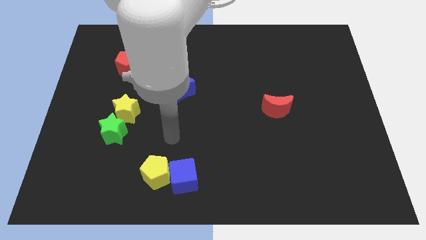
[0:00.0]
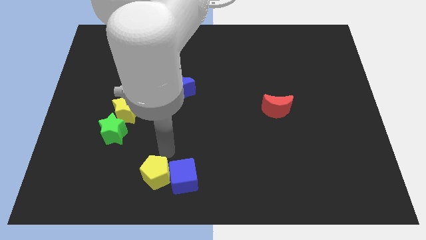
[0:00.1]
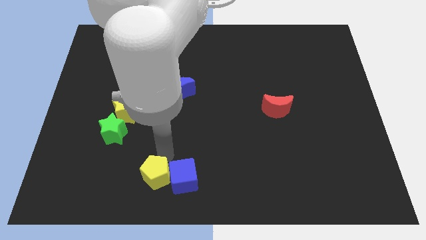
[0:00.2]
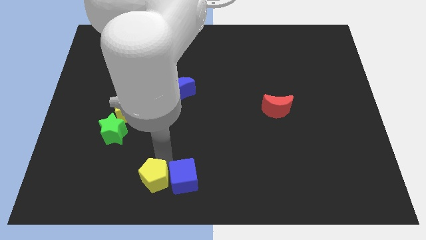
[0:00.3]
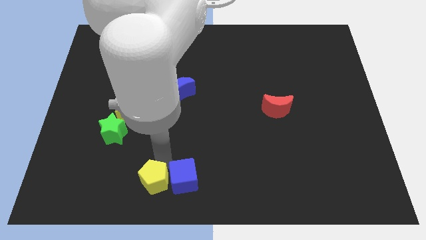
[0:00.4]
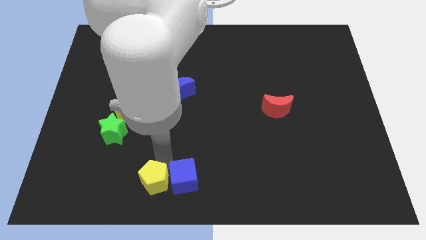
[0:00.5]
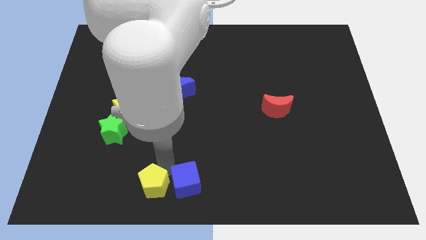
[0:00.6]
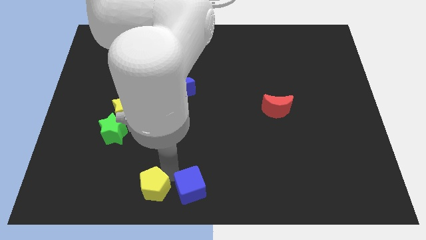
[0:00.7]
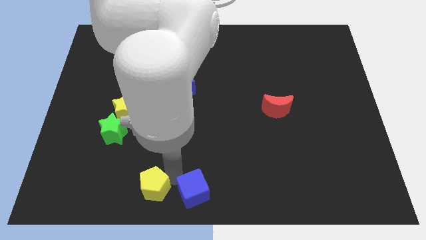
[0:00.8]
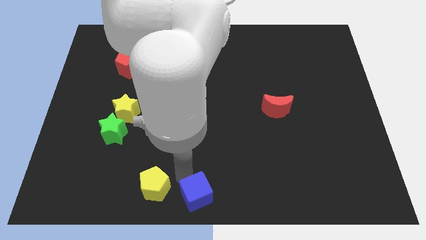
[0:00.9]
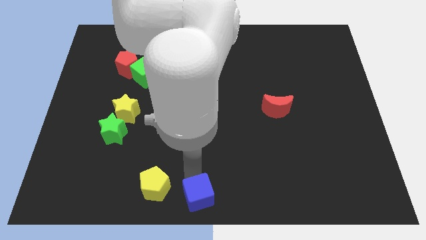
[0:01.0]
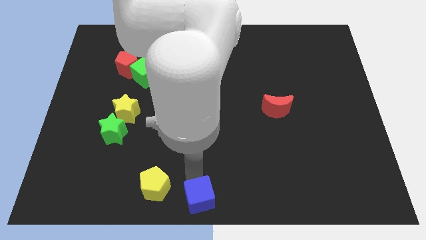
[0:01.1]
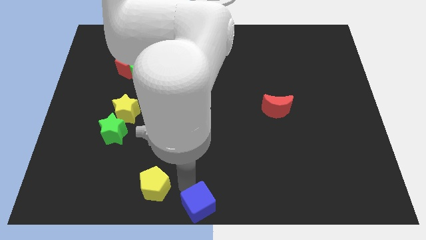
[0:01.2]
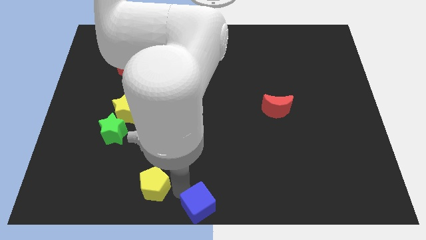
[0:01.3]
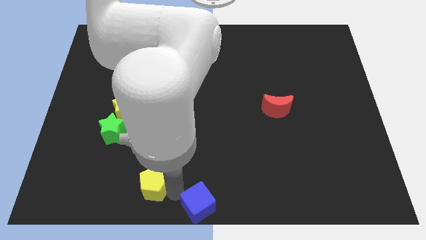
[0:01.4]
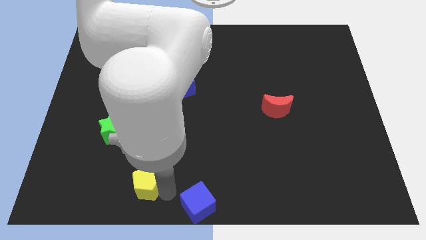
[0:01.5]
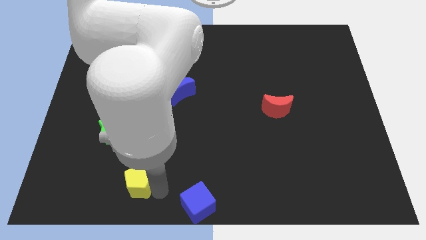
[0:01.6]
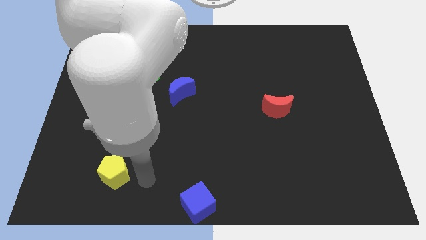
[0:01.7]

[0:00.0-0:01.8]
separate the yellow pentagon and blue cube

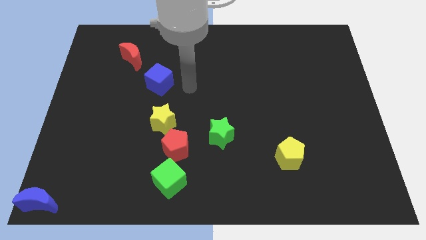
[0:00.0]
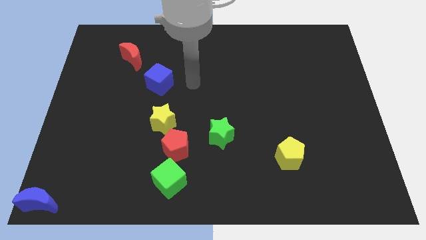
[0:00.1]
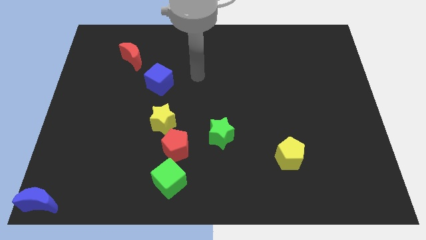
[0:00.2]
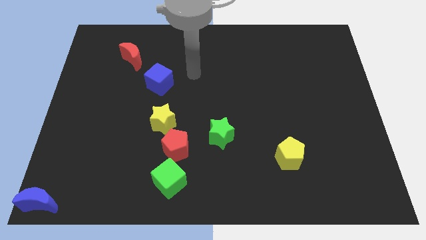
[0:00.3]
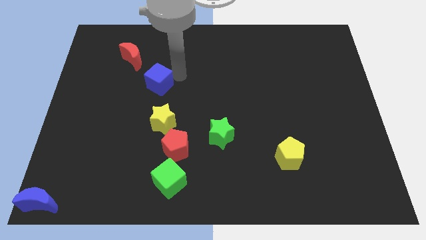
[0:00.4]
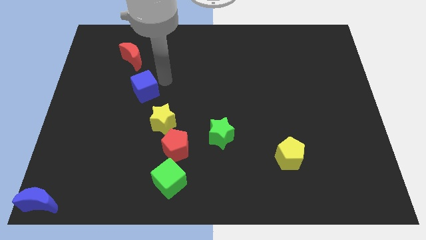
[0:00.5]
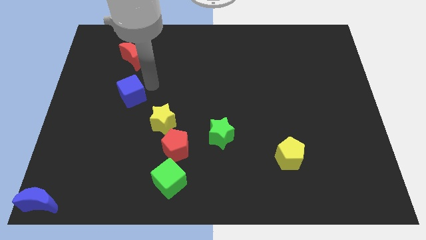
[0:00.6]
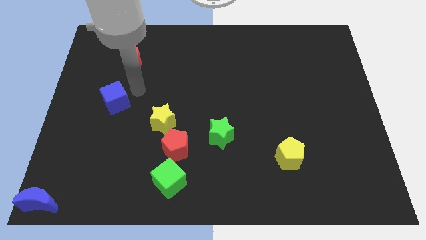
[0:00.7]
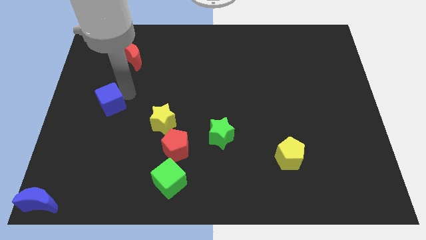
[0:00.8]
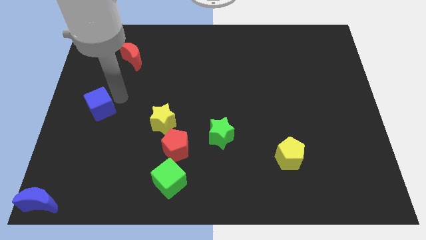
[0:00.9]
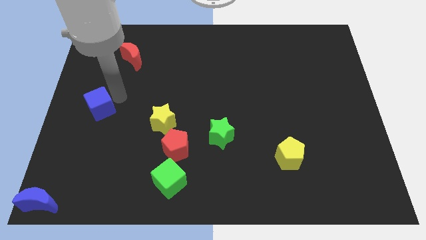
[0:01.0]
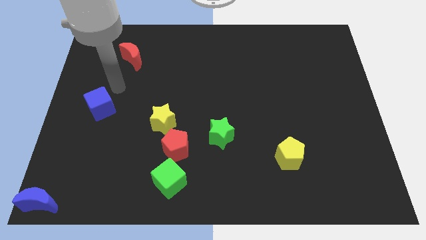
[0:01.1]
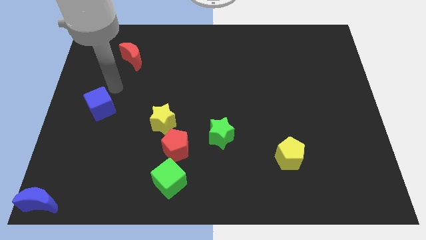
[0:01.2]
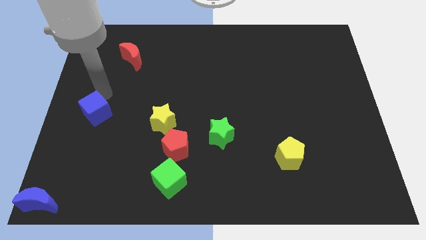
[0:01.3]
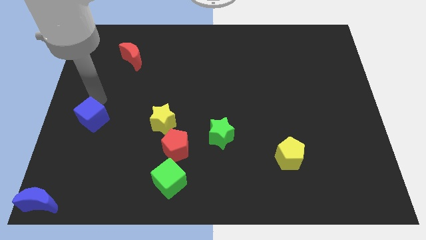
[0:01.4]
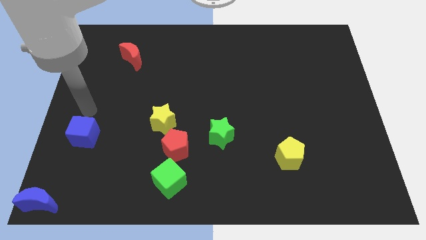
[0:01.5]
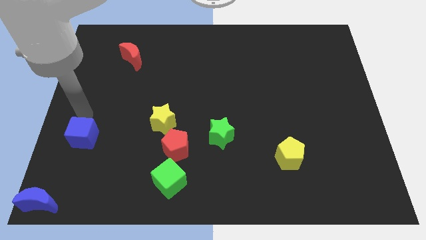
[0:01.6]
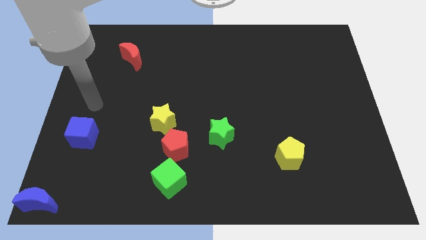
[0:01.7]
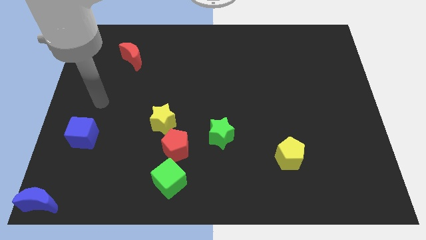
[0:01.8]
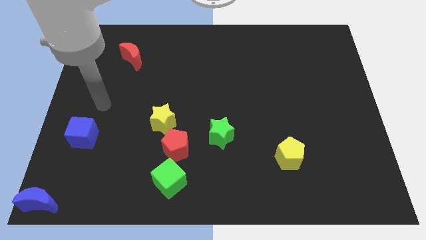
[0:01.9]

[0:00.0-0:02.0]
push the blue cube diagonally bottom left to the red moon

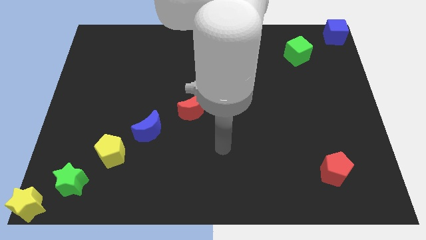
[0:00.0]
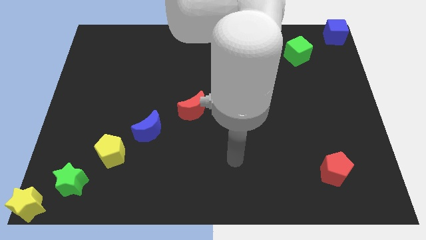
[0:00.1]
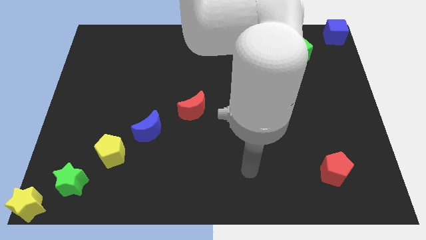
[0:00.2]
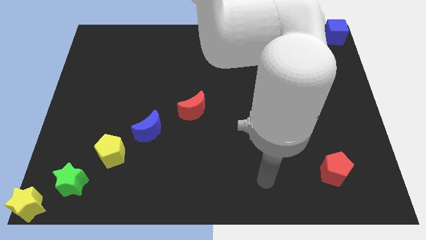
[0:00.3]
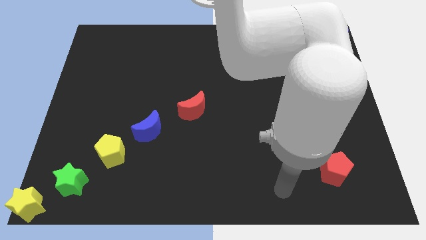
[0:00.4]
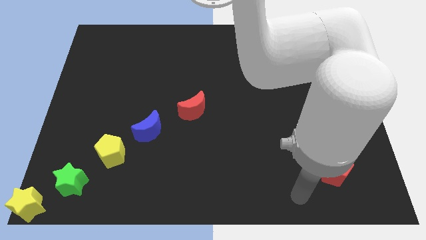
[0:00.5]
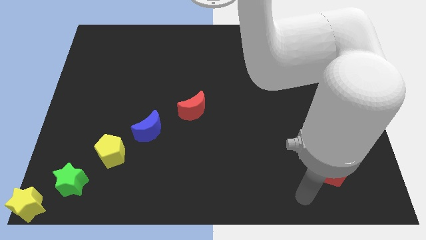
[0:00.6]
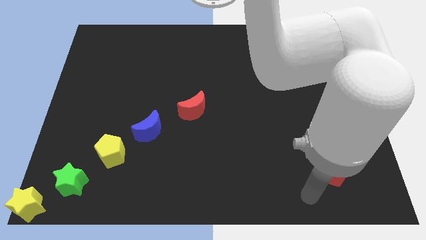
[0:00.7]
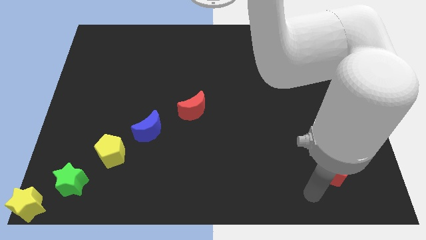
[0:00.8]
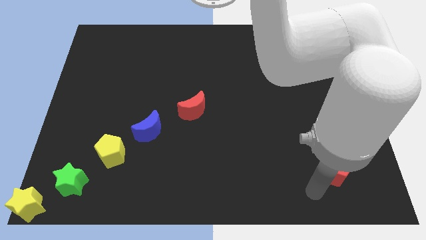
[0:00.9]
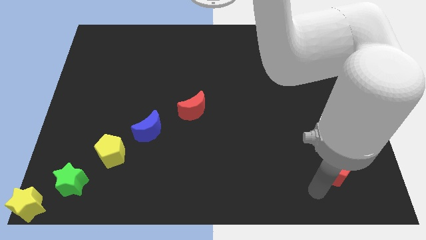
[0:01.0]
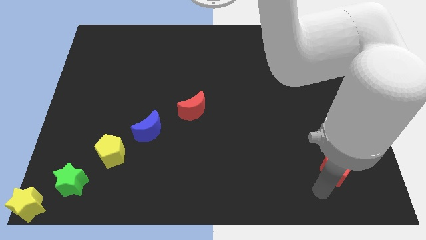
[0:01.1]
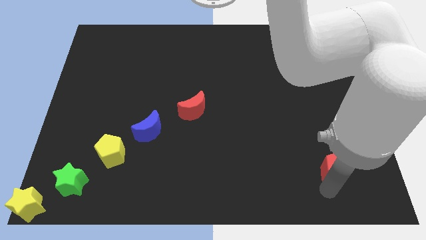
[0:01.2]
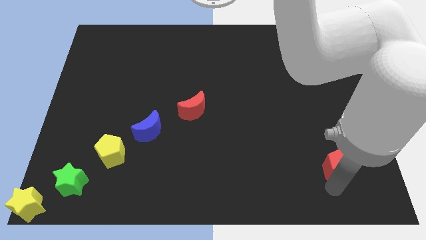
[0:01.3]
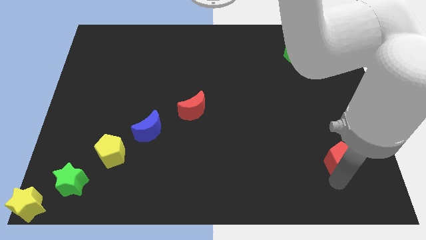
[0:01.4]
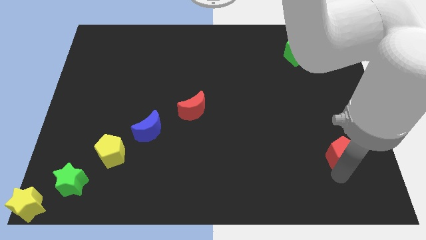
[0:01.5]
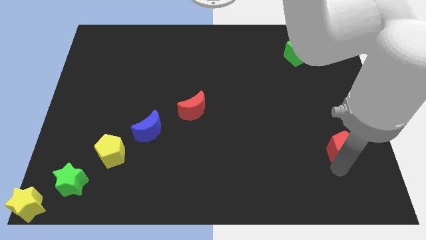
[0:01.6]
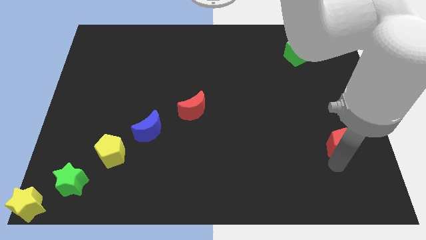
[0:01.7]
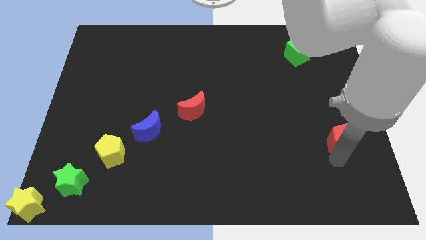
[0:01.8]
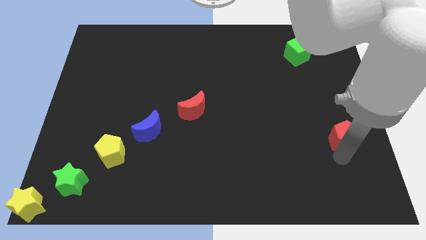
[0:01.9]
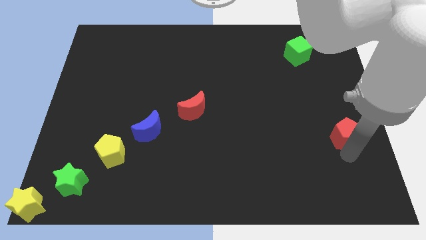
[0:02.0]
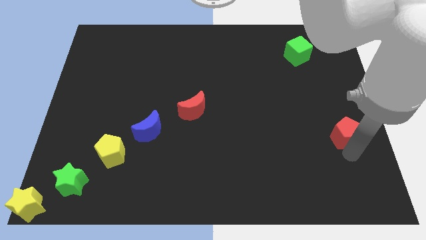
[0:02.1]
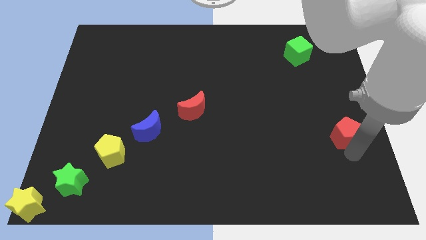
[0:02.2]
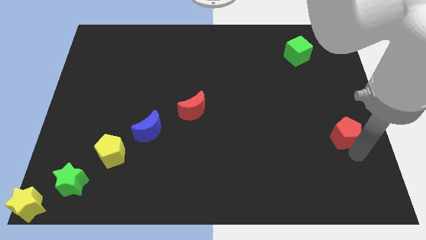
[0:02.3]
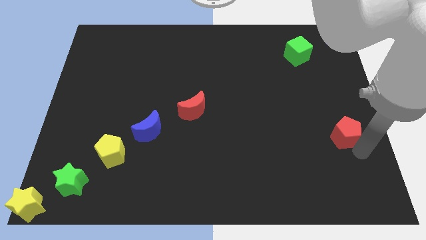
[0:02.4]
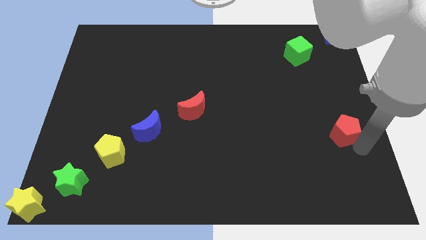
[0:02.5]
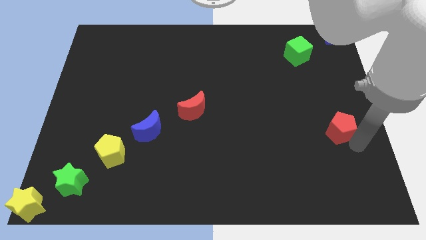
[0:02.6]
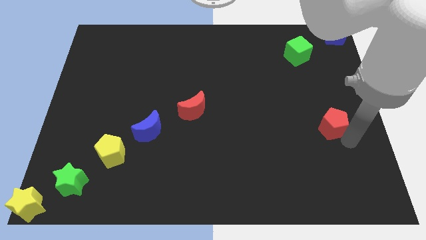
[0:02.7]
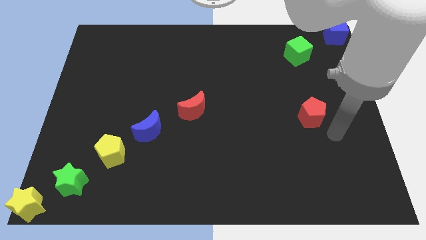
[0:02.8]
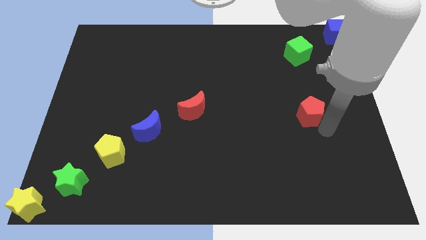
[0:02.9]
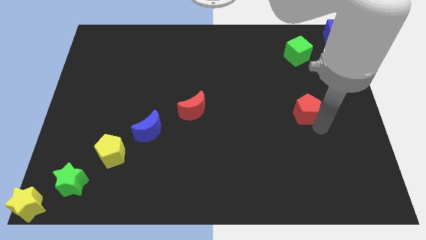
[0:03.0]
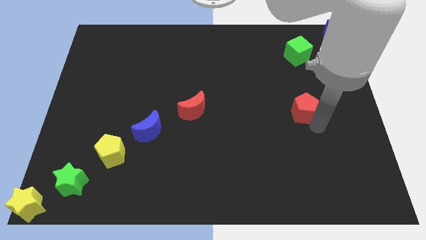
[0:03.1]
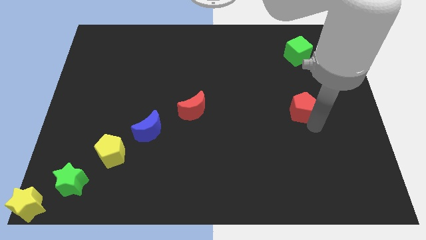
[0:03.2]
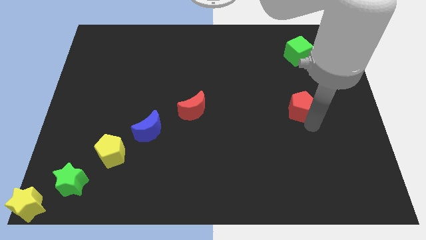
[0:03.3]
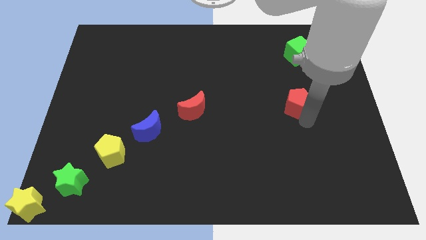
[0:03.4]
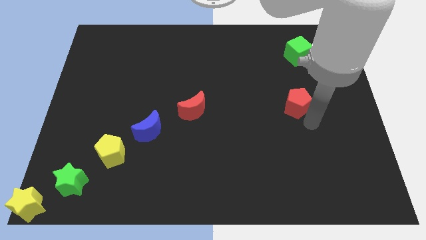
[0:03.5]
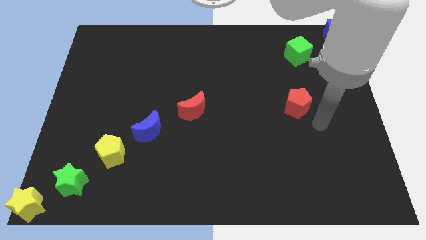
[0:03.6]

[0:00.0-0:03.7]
push the red pentagon to the top of the board

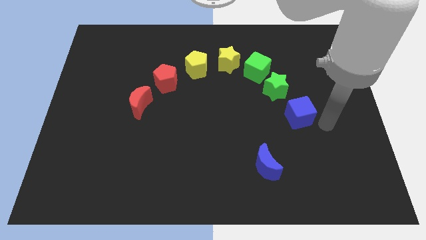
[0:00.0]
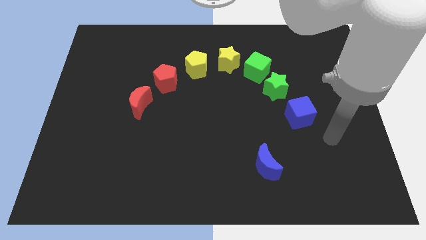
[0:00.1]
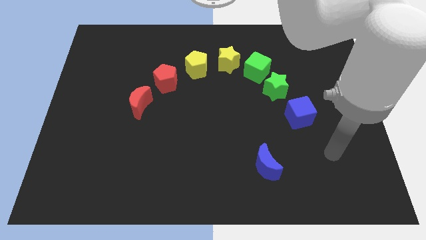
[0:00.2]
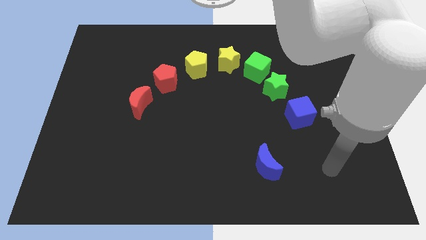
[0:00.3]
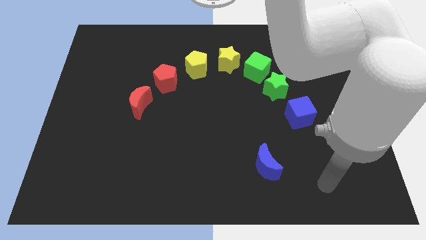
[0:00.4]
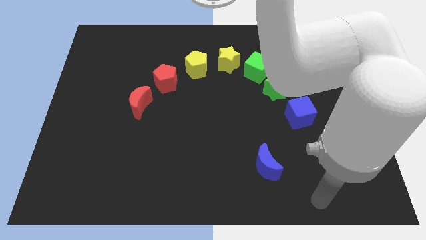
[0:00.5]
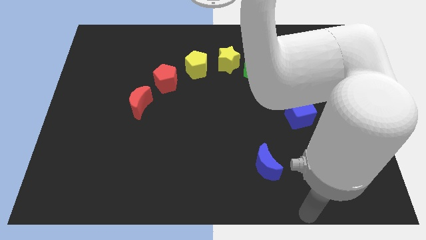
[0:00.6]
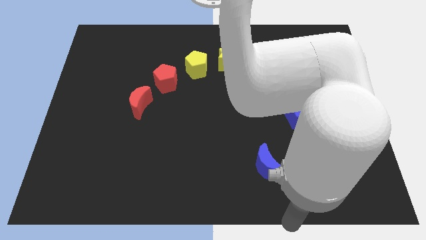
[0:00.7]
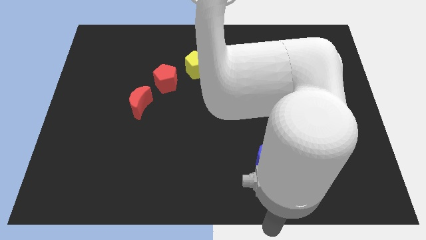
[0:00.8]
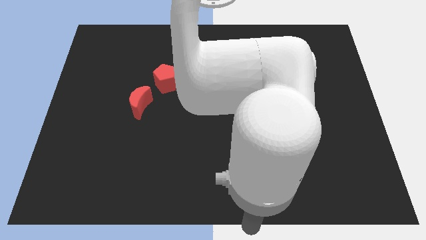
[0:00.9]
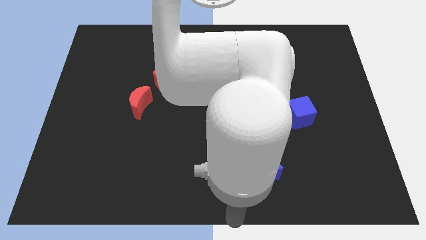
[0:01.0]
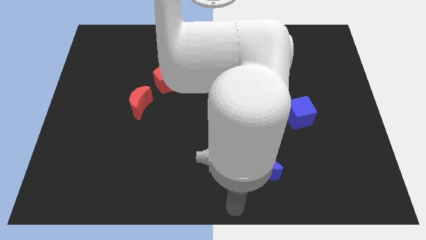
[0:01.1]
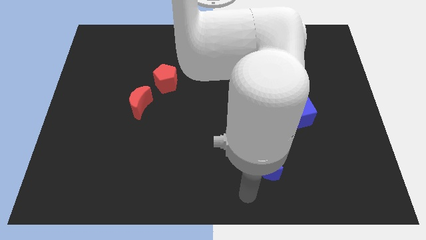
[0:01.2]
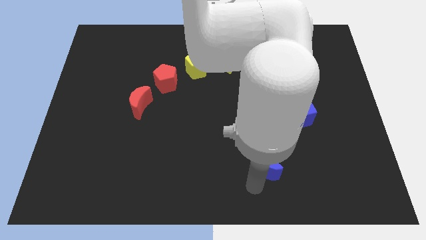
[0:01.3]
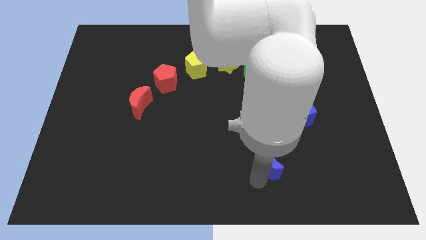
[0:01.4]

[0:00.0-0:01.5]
move your arm towards the bottom of the blue crescent
